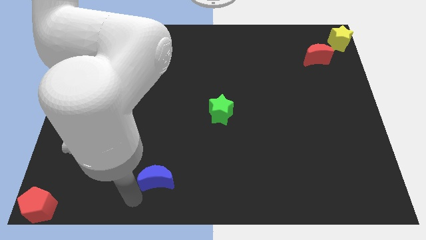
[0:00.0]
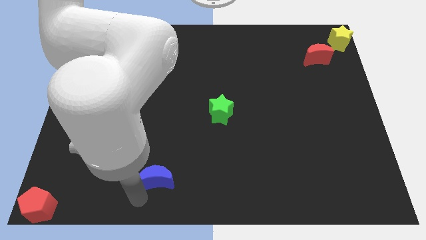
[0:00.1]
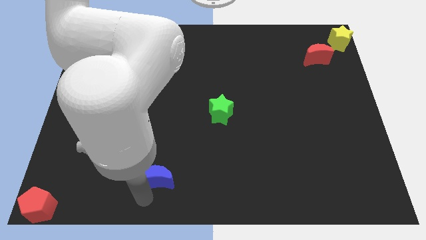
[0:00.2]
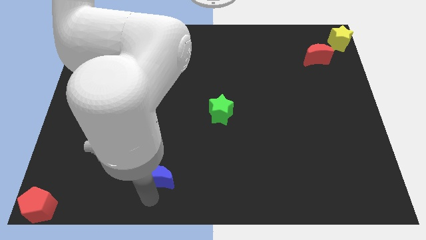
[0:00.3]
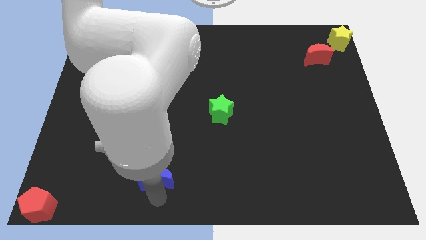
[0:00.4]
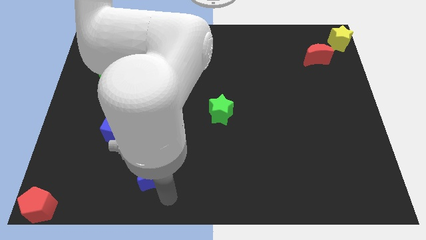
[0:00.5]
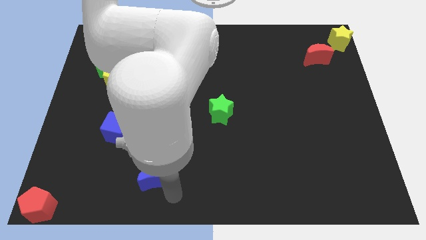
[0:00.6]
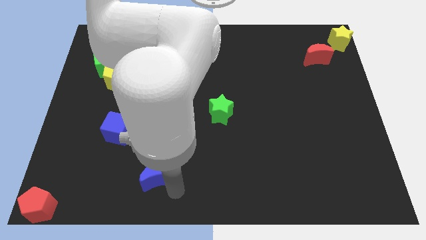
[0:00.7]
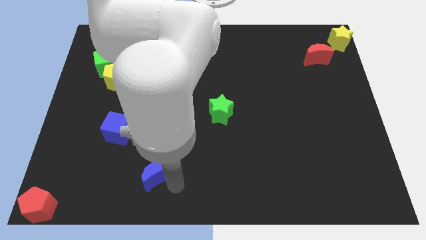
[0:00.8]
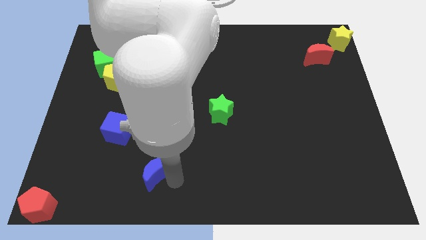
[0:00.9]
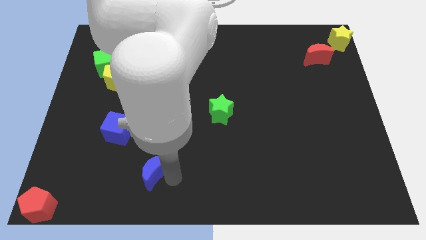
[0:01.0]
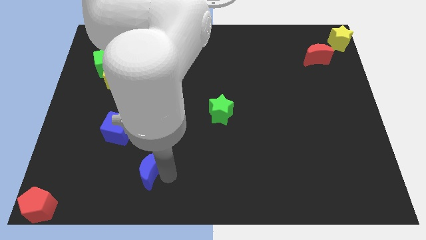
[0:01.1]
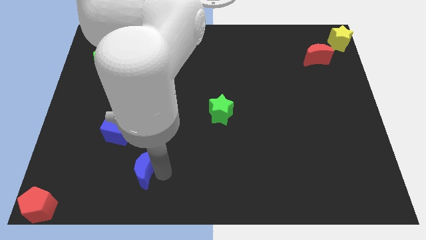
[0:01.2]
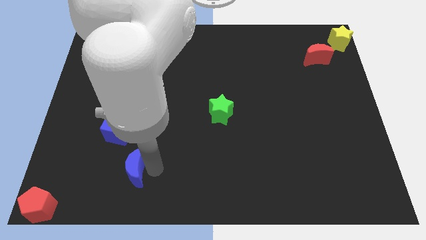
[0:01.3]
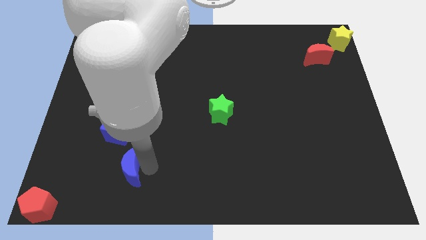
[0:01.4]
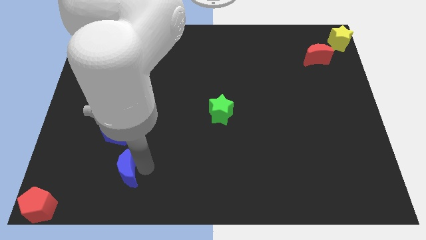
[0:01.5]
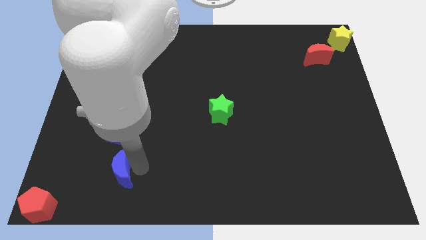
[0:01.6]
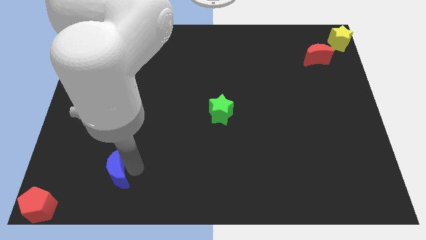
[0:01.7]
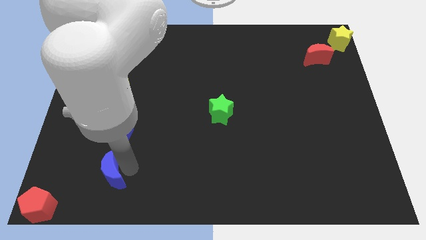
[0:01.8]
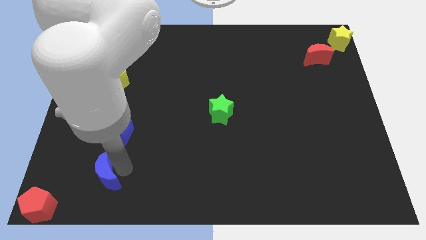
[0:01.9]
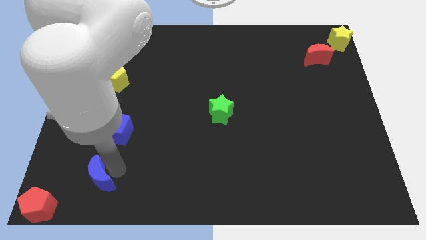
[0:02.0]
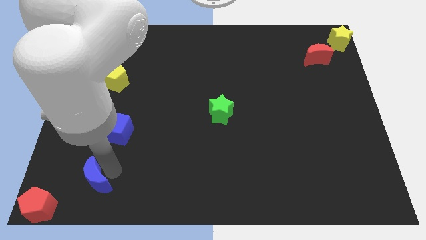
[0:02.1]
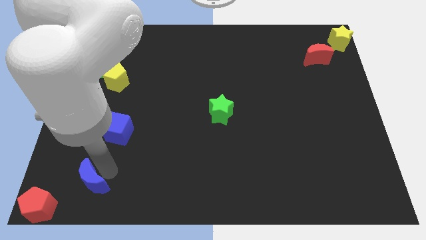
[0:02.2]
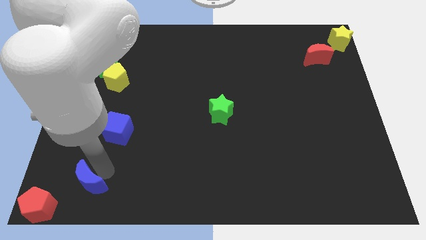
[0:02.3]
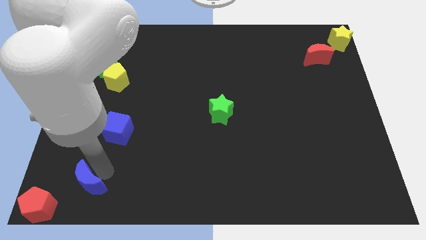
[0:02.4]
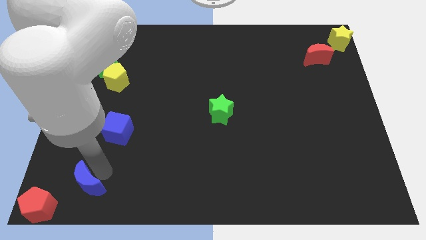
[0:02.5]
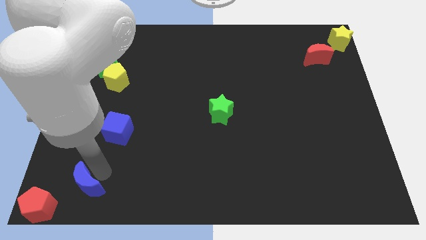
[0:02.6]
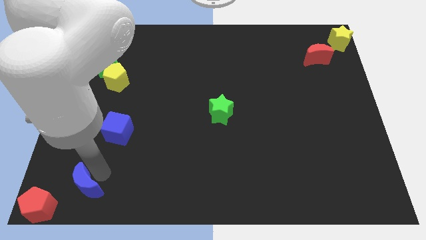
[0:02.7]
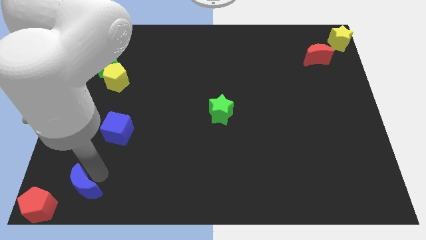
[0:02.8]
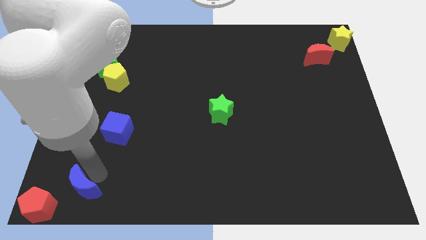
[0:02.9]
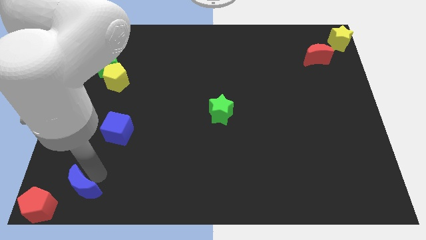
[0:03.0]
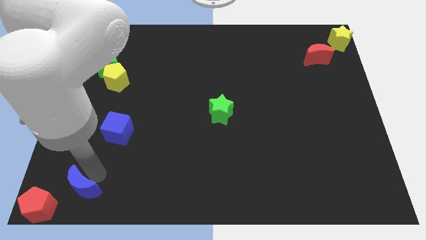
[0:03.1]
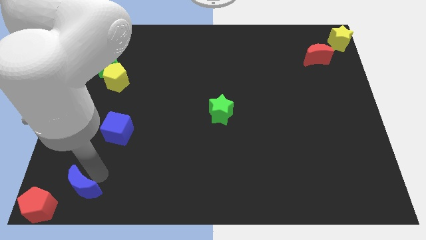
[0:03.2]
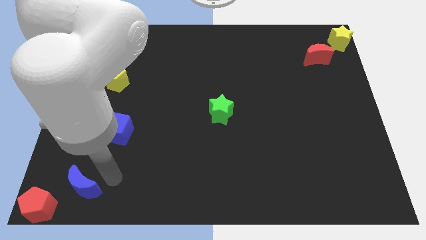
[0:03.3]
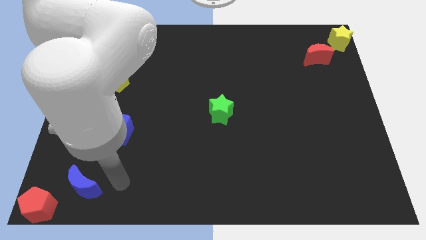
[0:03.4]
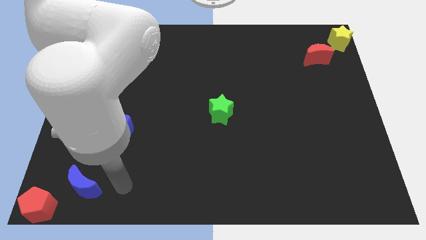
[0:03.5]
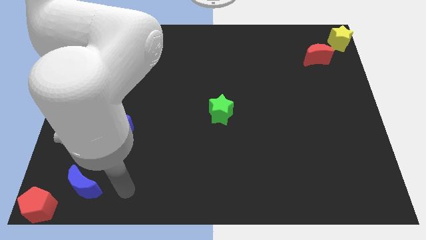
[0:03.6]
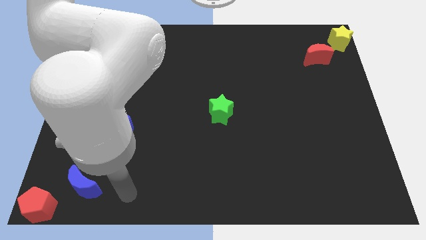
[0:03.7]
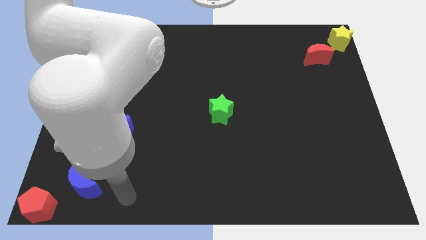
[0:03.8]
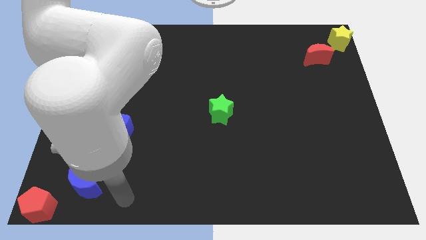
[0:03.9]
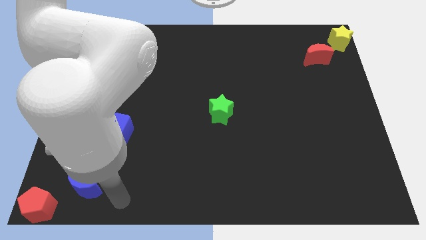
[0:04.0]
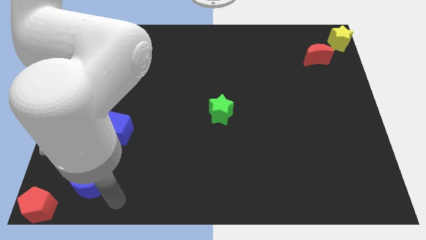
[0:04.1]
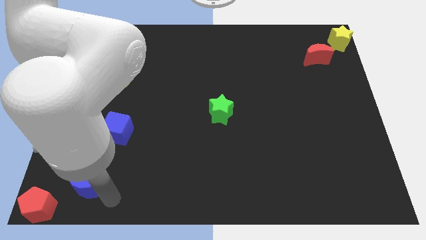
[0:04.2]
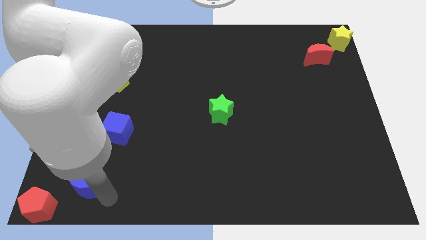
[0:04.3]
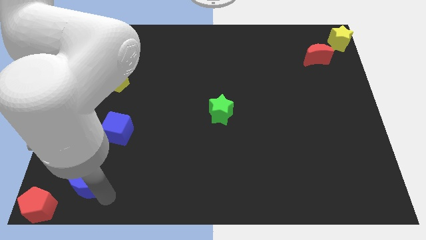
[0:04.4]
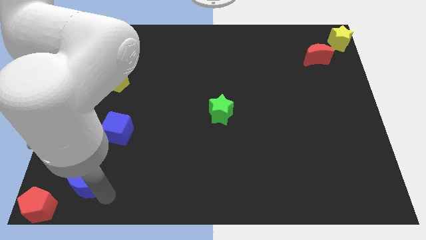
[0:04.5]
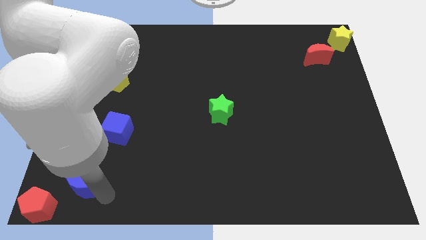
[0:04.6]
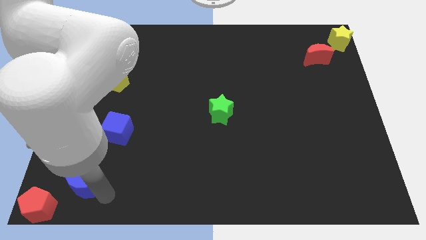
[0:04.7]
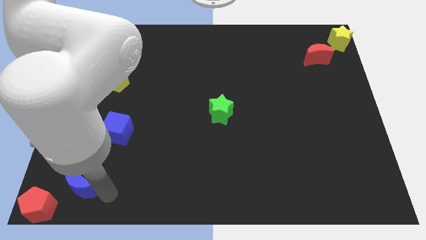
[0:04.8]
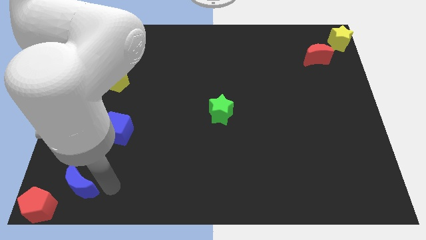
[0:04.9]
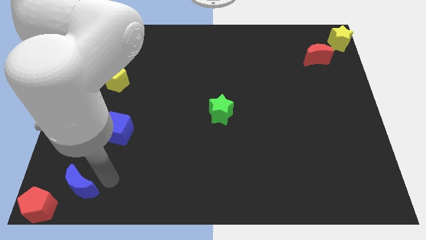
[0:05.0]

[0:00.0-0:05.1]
move blue moon diagonally above the red pentagon

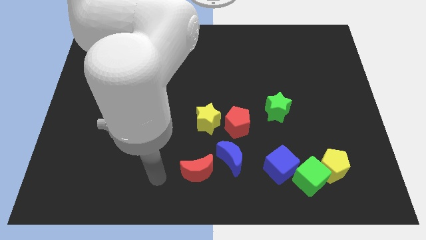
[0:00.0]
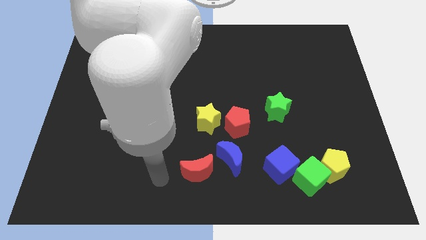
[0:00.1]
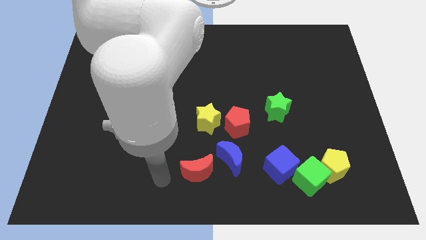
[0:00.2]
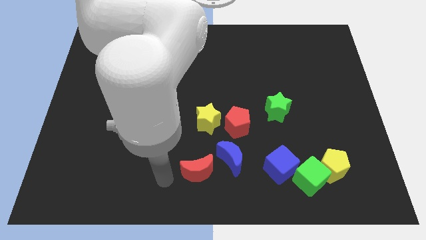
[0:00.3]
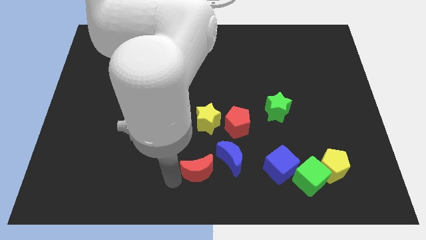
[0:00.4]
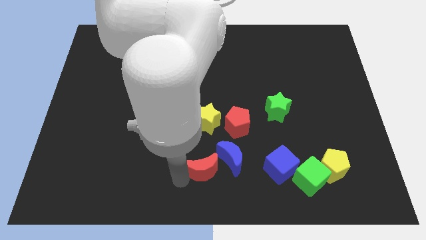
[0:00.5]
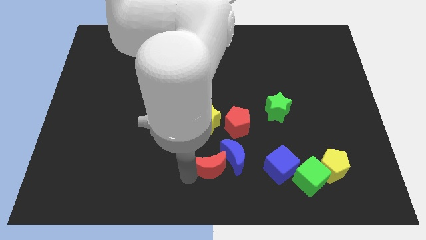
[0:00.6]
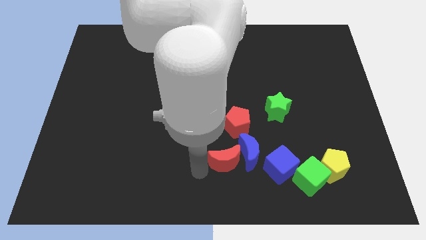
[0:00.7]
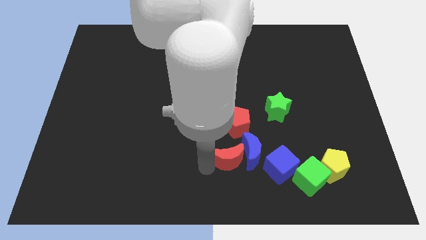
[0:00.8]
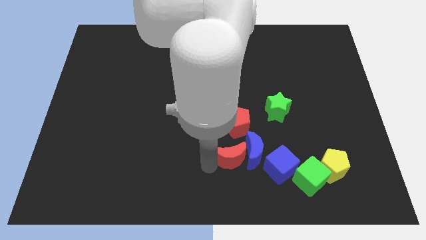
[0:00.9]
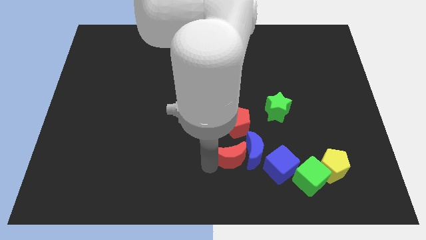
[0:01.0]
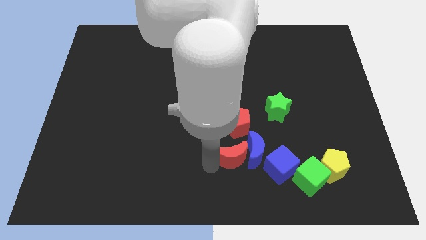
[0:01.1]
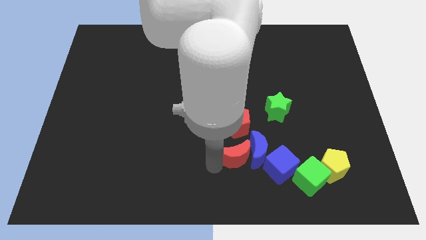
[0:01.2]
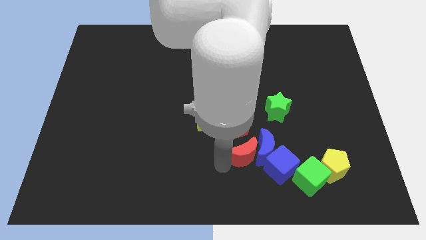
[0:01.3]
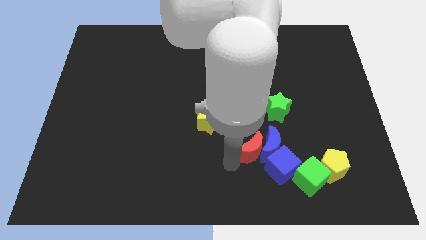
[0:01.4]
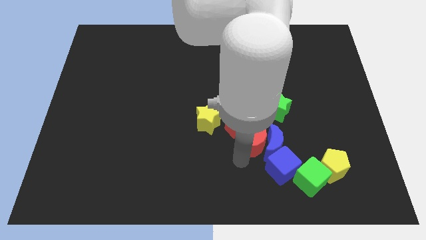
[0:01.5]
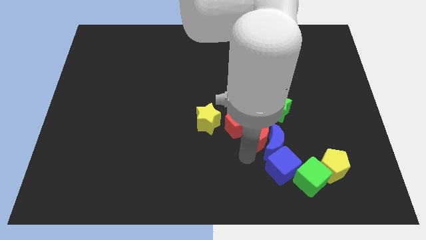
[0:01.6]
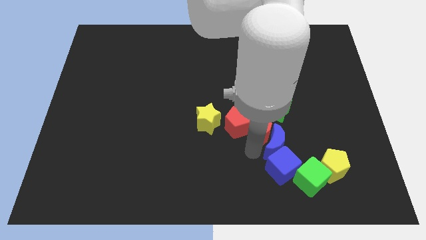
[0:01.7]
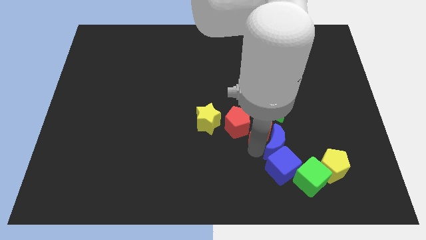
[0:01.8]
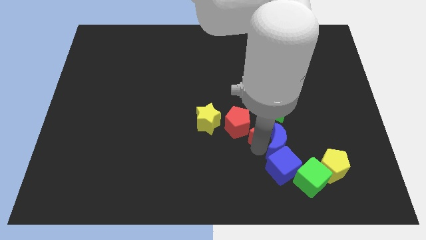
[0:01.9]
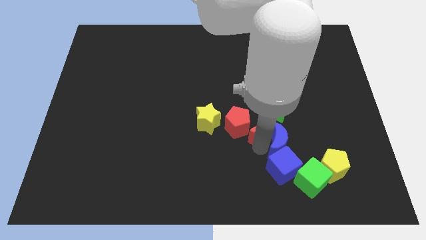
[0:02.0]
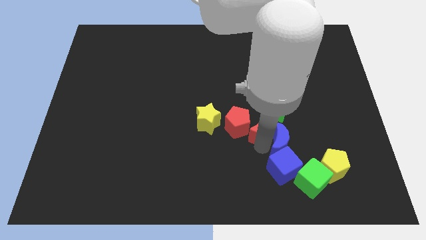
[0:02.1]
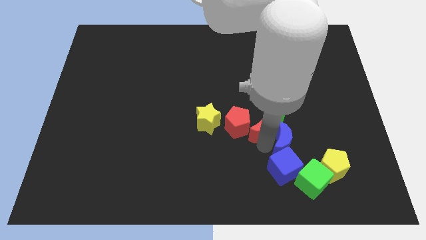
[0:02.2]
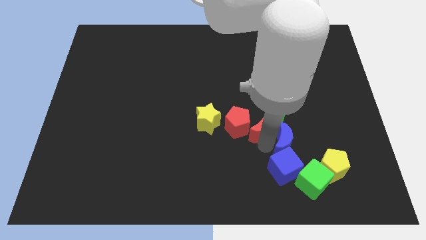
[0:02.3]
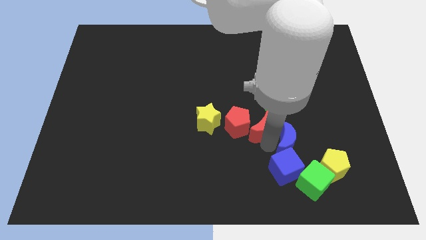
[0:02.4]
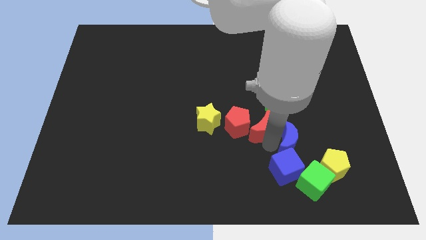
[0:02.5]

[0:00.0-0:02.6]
push red moon into the blue moon

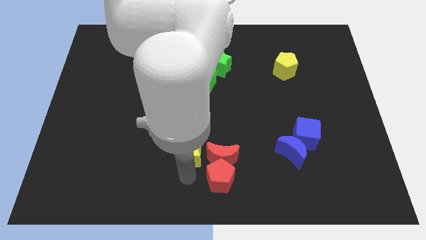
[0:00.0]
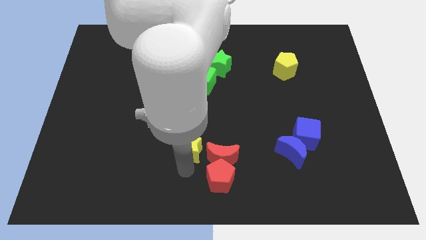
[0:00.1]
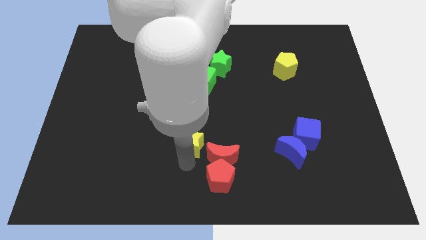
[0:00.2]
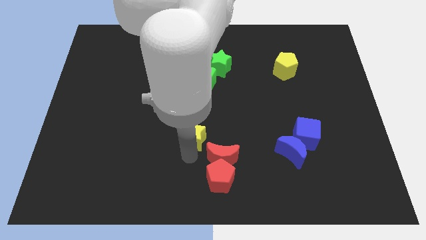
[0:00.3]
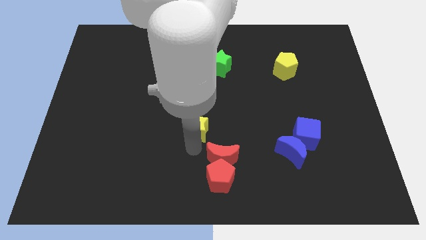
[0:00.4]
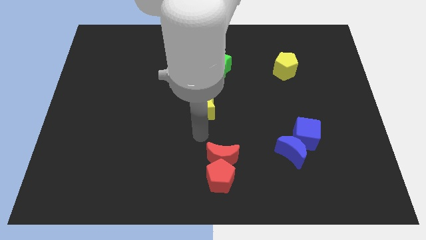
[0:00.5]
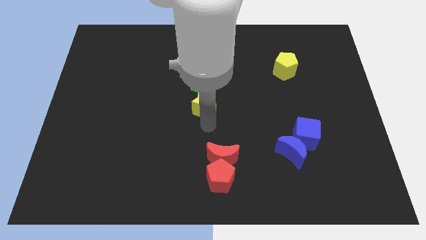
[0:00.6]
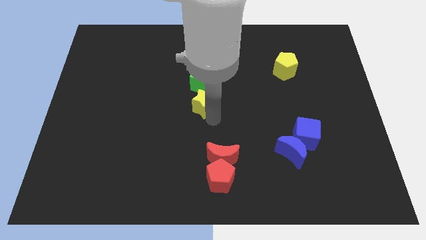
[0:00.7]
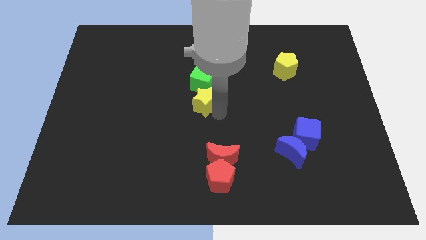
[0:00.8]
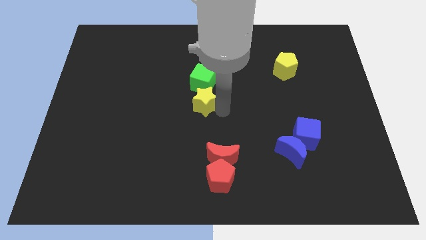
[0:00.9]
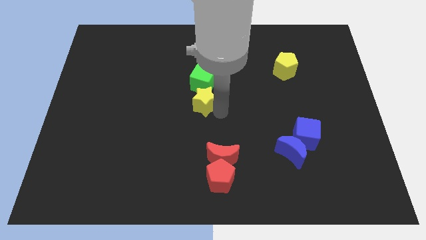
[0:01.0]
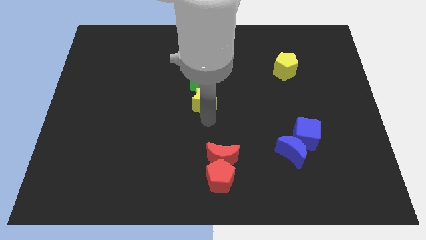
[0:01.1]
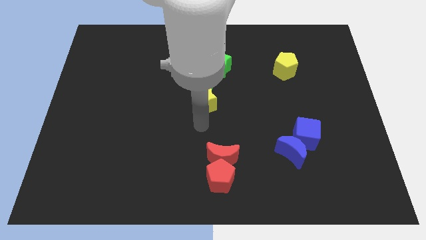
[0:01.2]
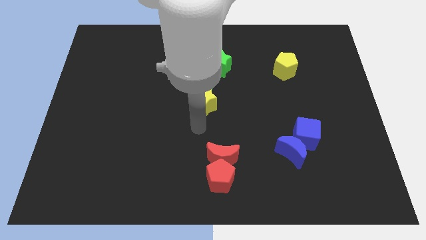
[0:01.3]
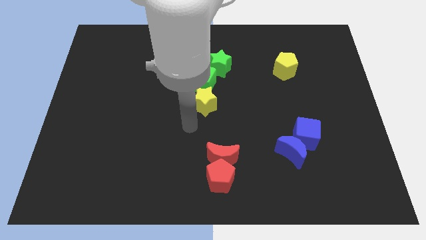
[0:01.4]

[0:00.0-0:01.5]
move the yellow star to bottom of the green cube
